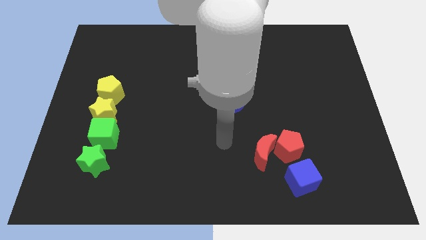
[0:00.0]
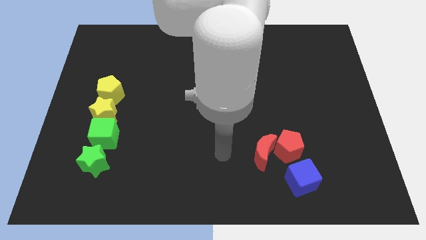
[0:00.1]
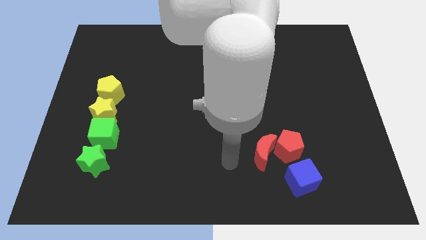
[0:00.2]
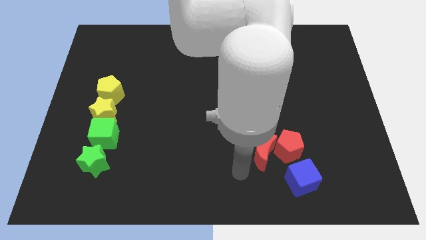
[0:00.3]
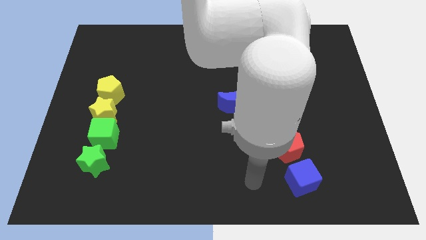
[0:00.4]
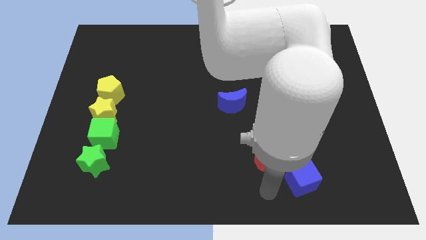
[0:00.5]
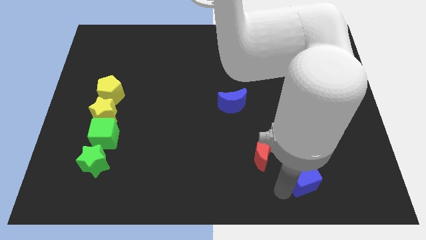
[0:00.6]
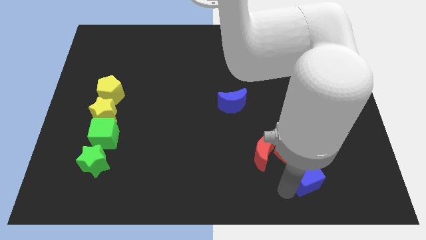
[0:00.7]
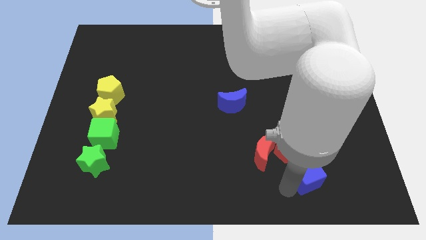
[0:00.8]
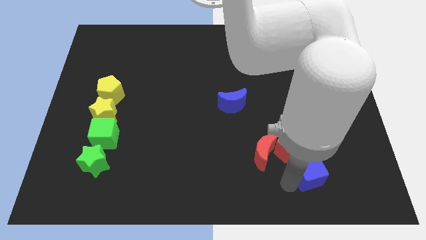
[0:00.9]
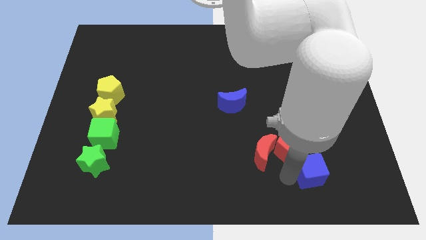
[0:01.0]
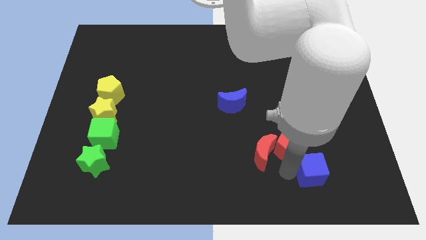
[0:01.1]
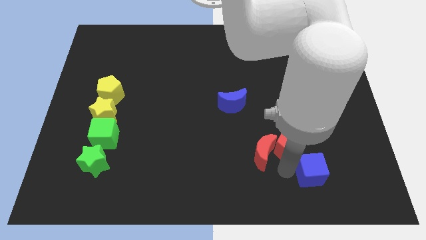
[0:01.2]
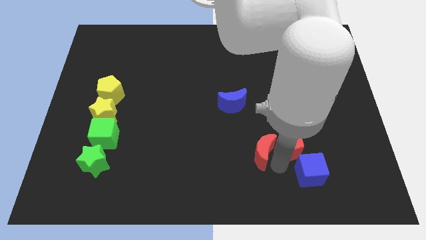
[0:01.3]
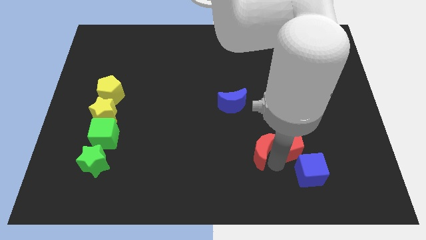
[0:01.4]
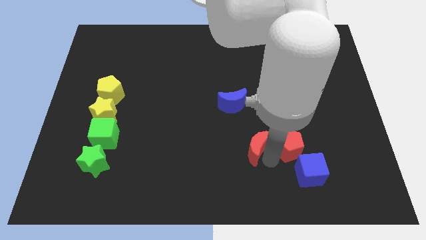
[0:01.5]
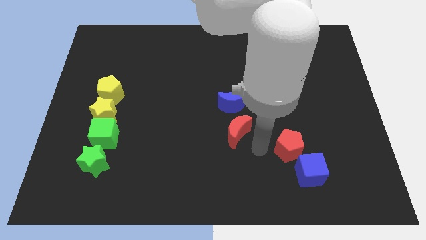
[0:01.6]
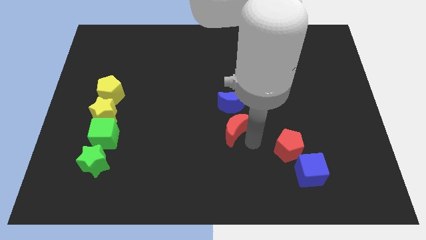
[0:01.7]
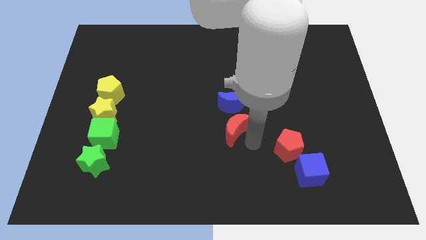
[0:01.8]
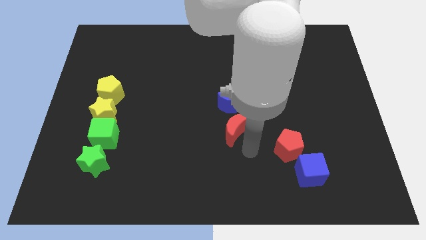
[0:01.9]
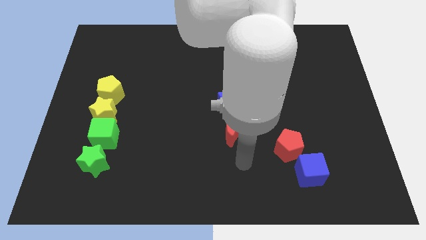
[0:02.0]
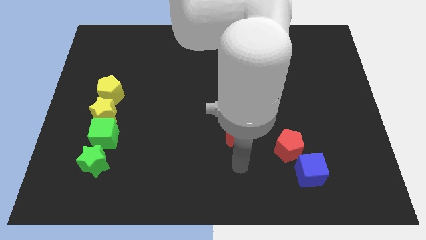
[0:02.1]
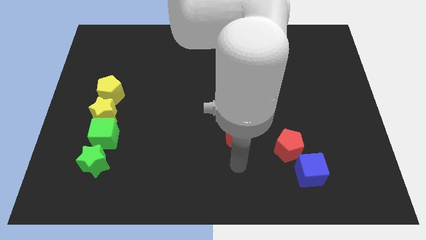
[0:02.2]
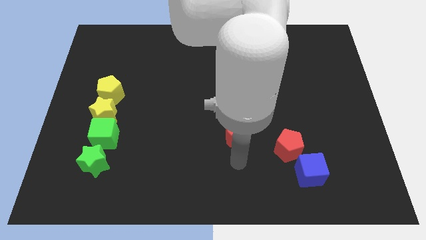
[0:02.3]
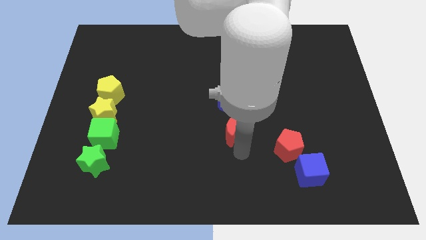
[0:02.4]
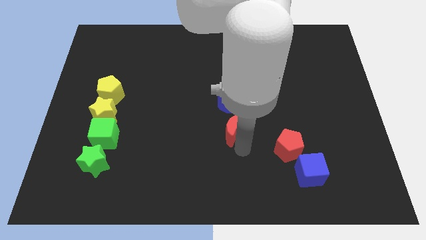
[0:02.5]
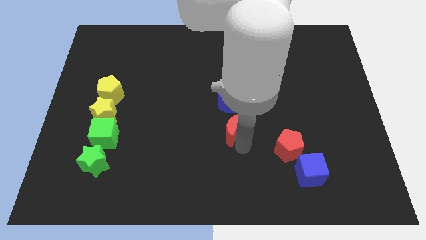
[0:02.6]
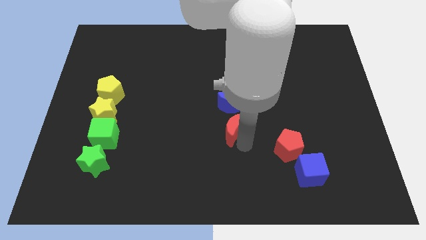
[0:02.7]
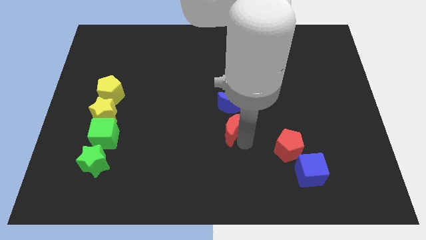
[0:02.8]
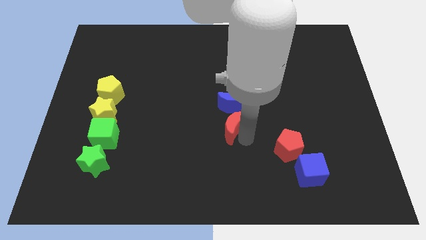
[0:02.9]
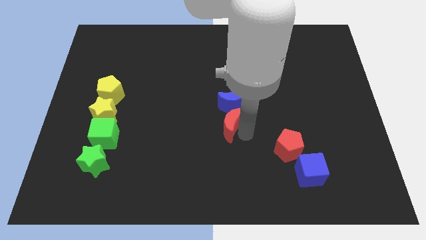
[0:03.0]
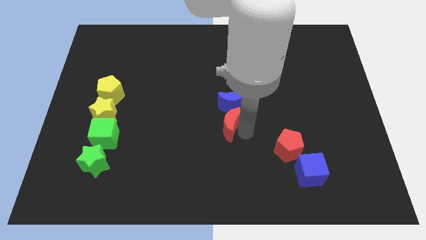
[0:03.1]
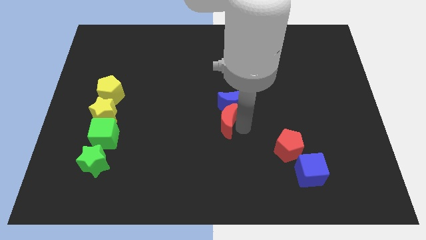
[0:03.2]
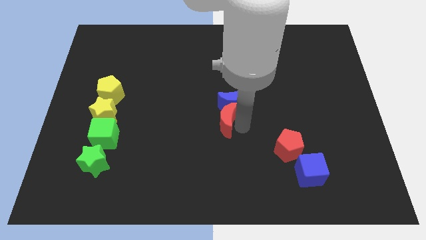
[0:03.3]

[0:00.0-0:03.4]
move the red moon to the bottom side of the blue moon

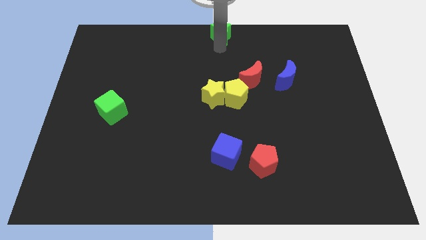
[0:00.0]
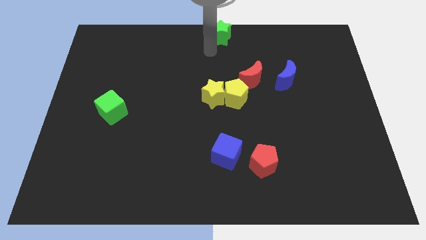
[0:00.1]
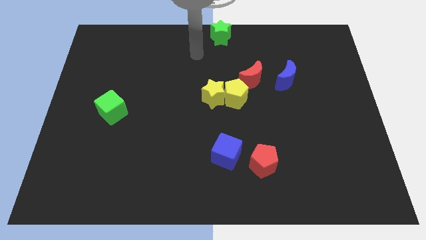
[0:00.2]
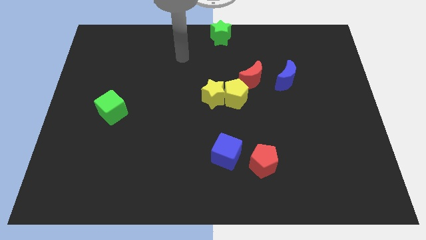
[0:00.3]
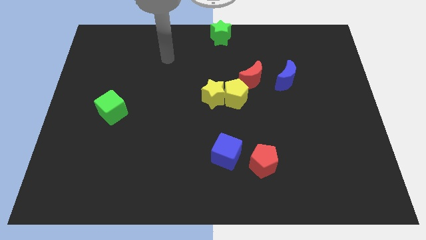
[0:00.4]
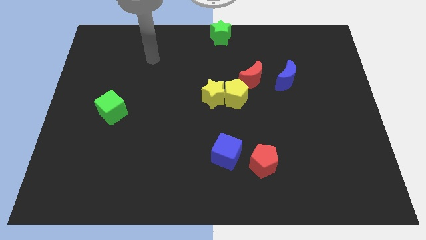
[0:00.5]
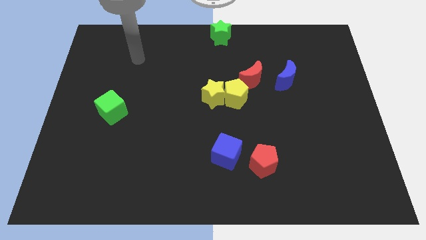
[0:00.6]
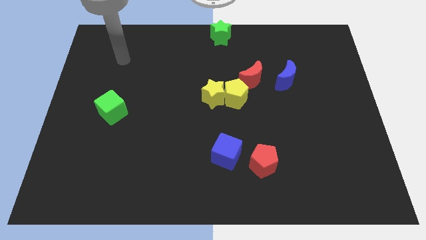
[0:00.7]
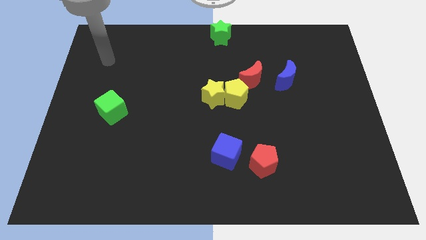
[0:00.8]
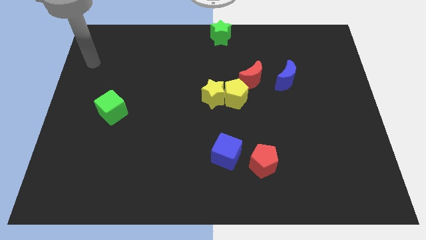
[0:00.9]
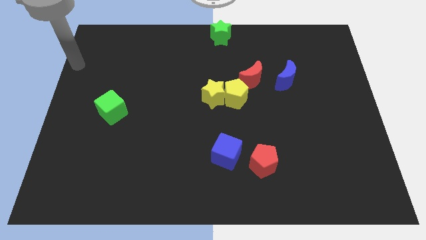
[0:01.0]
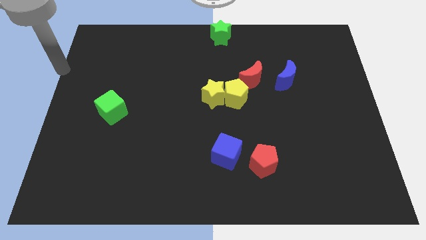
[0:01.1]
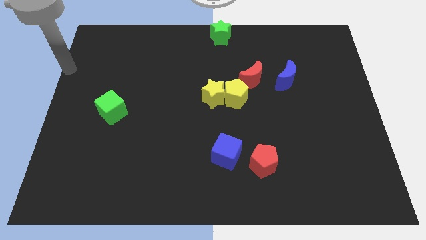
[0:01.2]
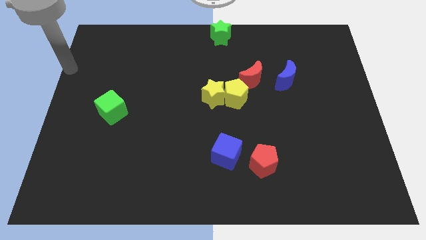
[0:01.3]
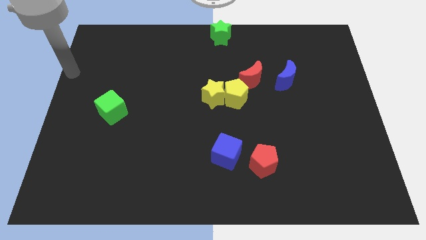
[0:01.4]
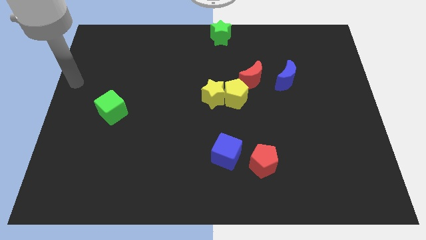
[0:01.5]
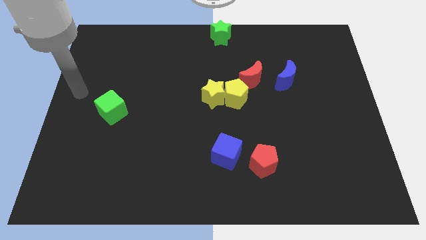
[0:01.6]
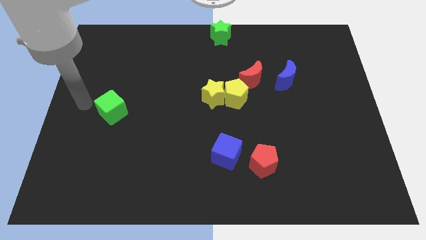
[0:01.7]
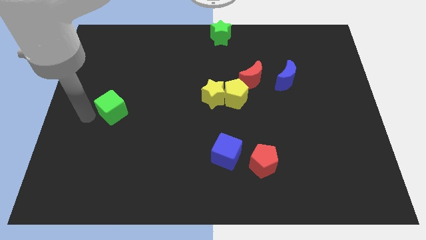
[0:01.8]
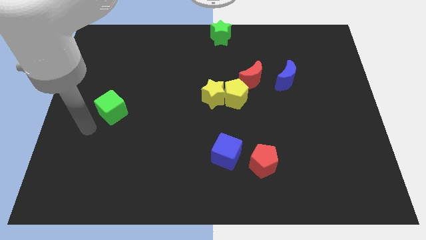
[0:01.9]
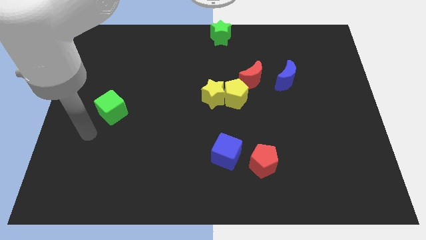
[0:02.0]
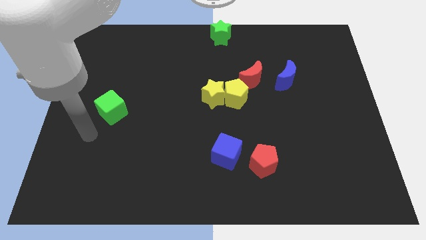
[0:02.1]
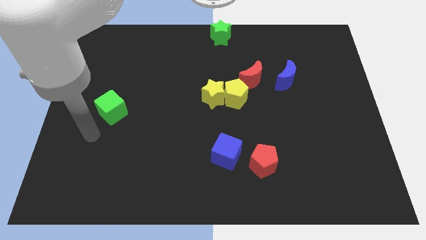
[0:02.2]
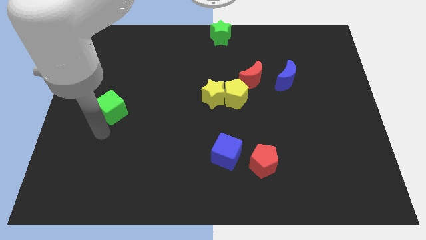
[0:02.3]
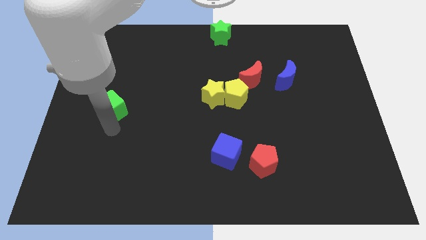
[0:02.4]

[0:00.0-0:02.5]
point your arm at the bottom side of green cube

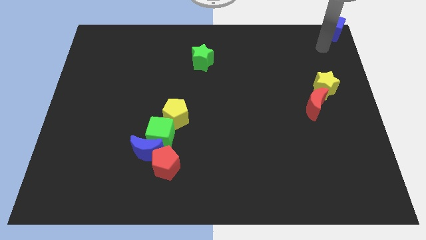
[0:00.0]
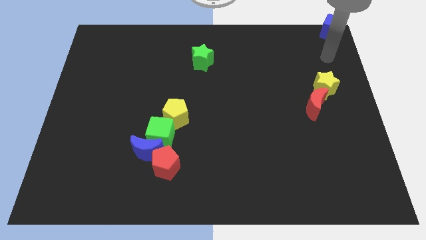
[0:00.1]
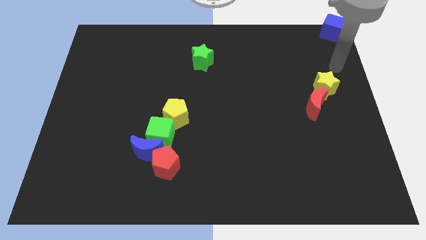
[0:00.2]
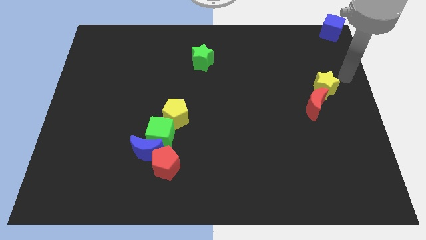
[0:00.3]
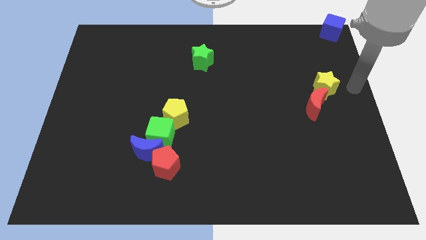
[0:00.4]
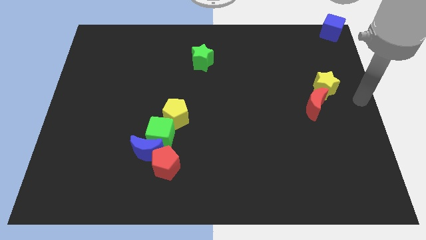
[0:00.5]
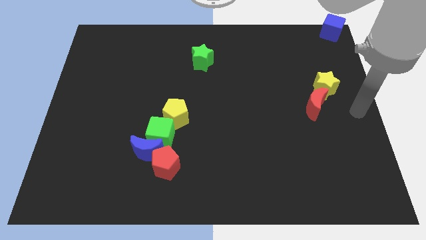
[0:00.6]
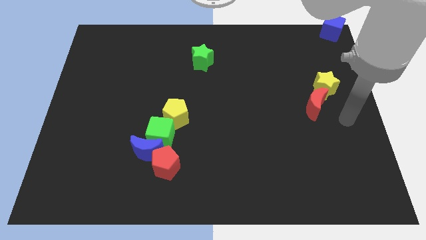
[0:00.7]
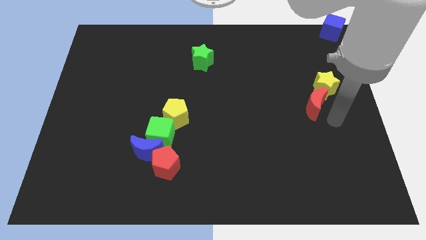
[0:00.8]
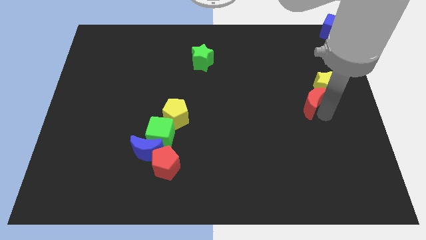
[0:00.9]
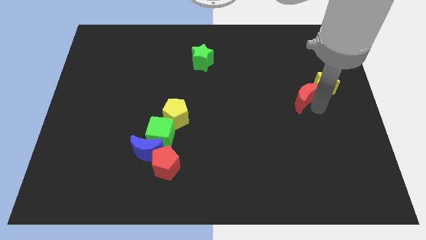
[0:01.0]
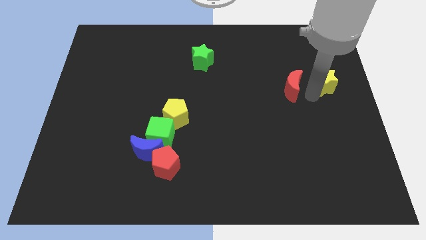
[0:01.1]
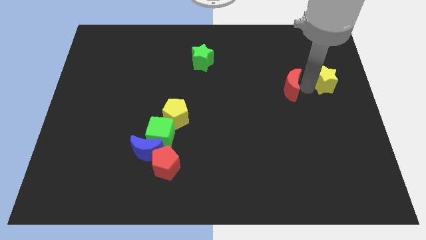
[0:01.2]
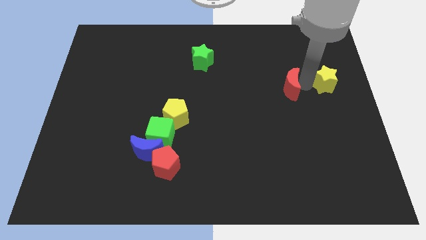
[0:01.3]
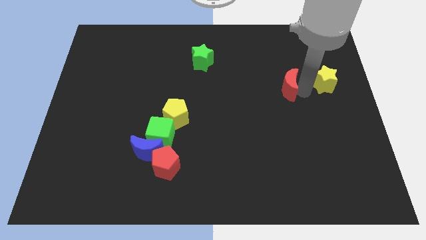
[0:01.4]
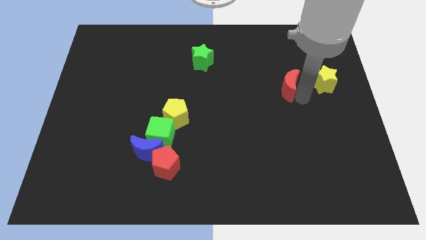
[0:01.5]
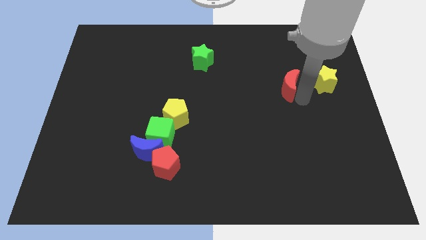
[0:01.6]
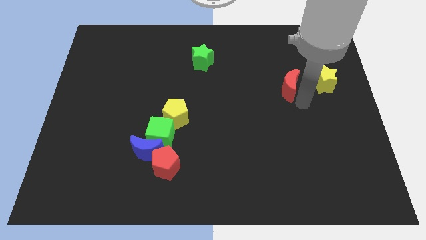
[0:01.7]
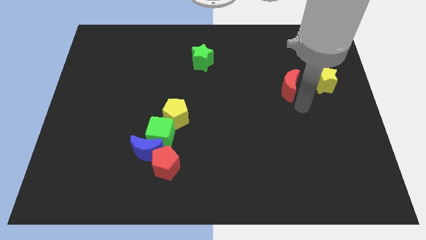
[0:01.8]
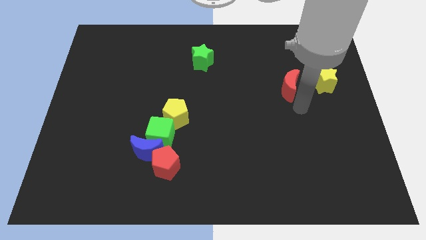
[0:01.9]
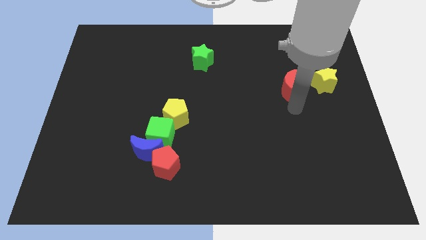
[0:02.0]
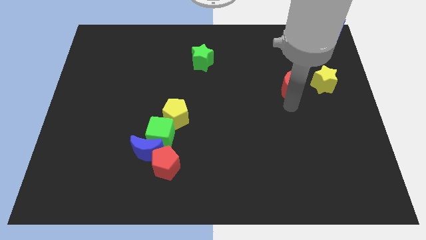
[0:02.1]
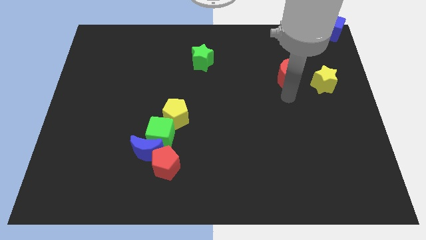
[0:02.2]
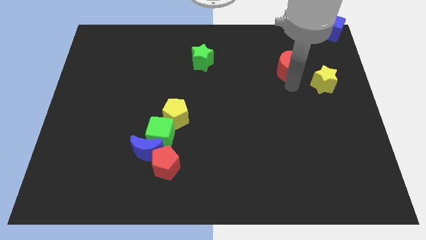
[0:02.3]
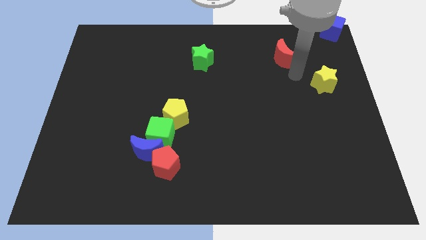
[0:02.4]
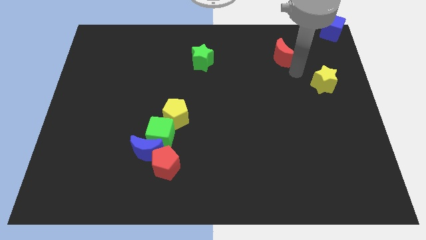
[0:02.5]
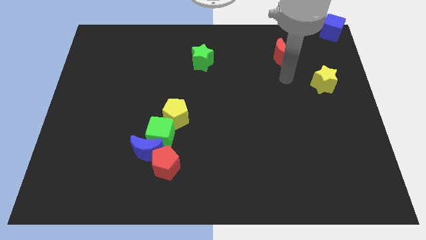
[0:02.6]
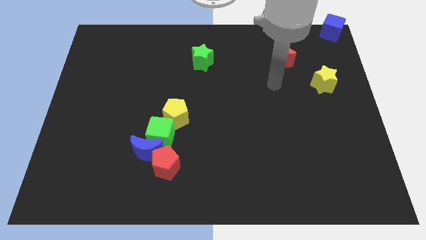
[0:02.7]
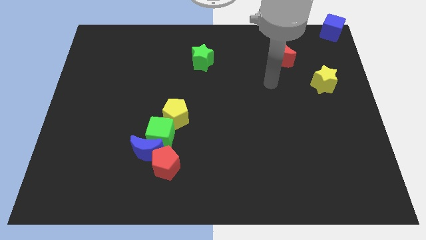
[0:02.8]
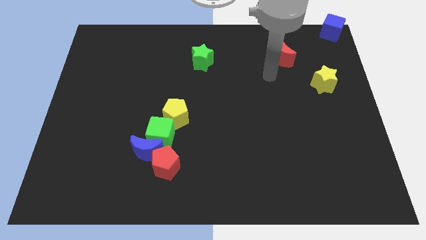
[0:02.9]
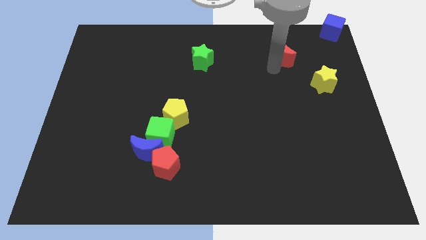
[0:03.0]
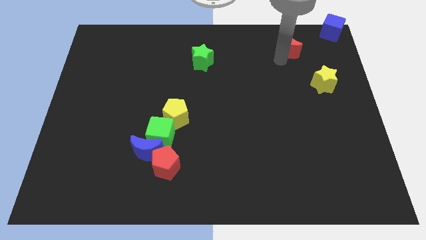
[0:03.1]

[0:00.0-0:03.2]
separate the red moon from the yellow star
